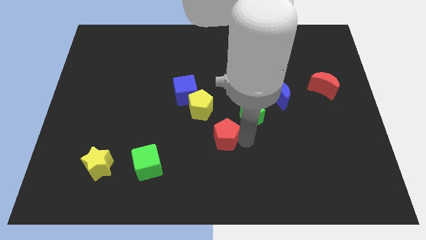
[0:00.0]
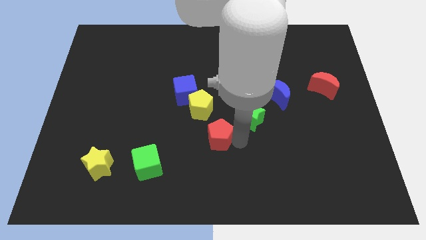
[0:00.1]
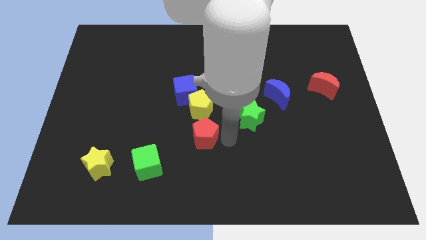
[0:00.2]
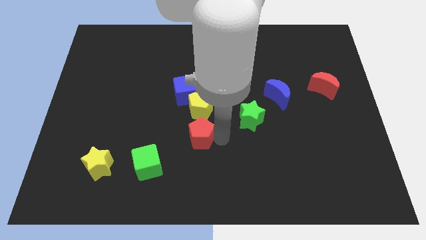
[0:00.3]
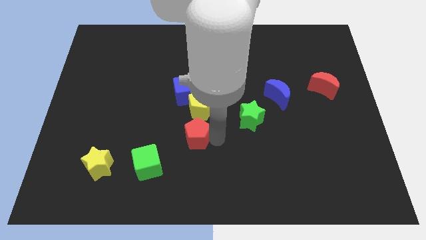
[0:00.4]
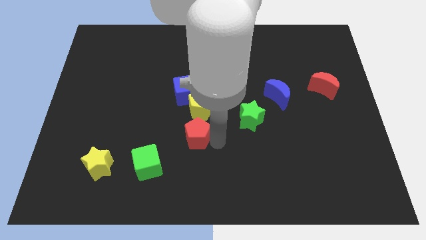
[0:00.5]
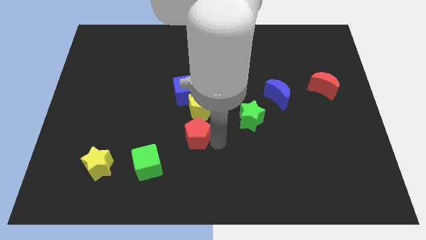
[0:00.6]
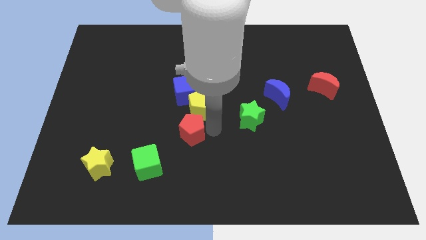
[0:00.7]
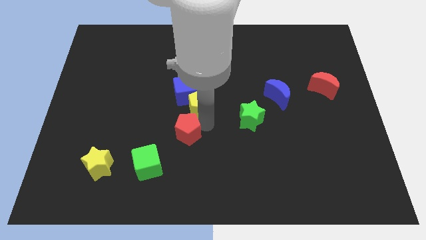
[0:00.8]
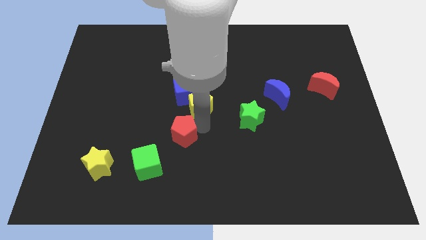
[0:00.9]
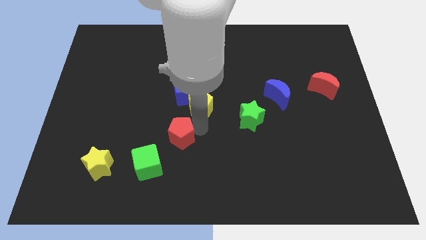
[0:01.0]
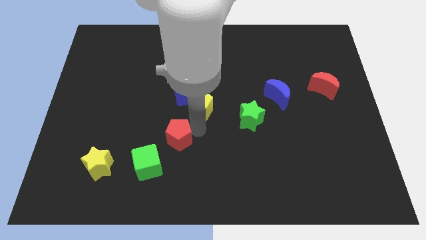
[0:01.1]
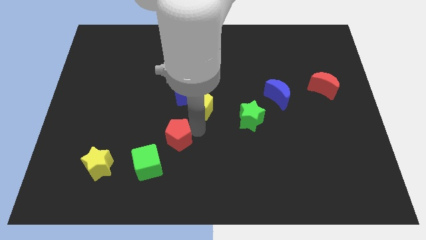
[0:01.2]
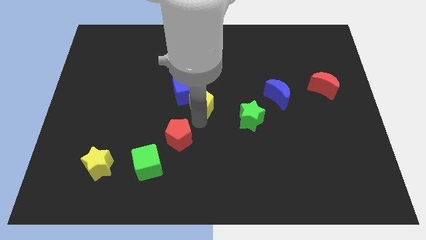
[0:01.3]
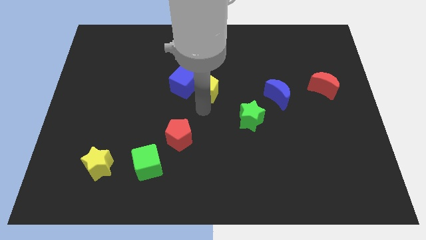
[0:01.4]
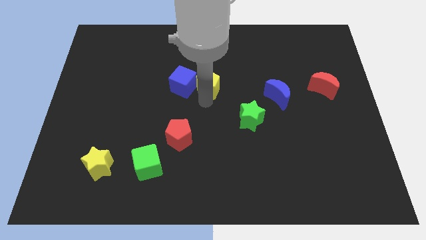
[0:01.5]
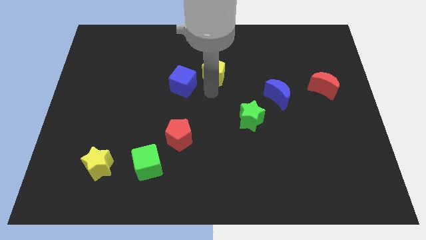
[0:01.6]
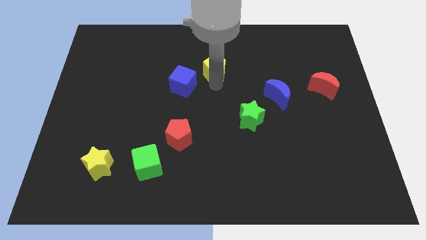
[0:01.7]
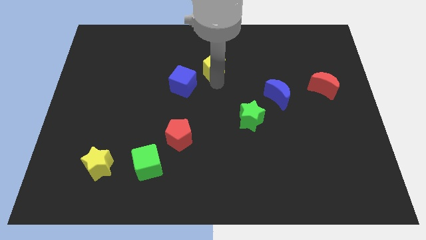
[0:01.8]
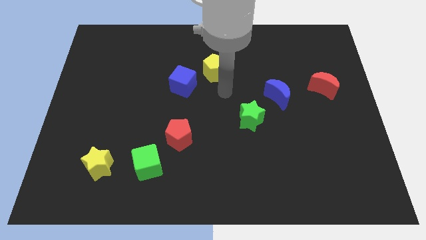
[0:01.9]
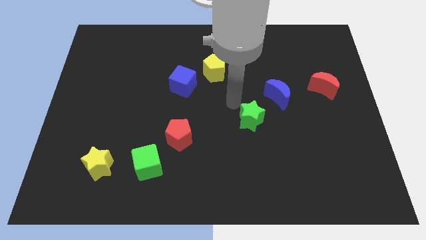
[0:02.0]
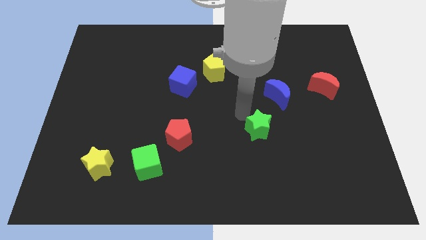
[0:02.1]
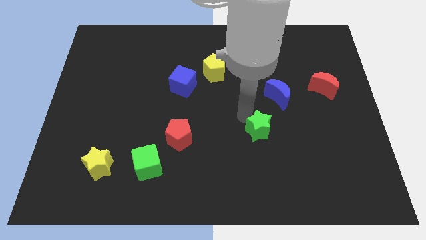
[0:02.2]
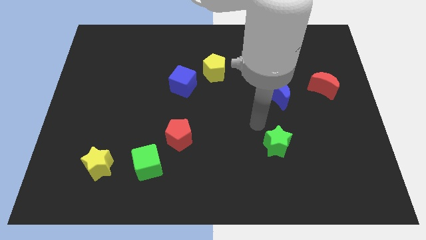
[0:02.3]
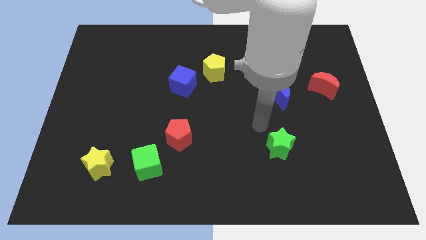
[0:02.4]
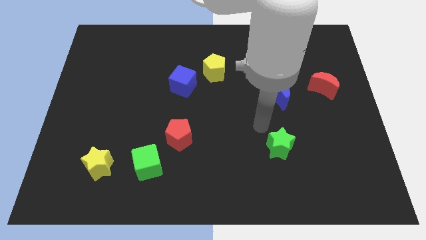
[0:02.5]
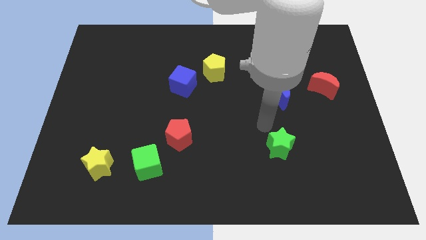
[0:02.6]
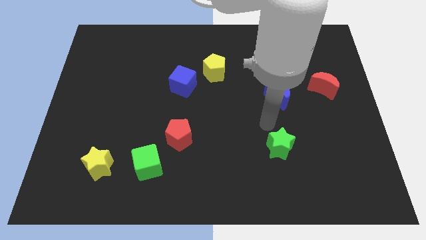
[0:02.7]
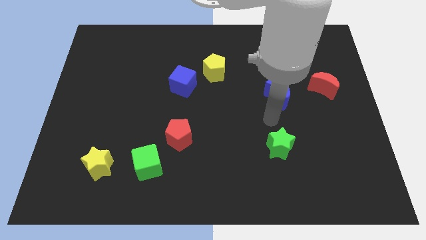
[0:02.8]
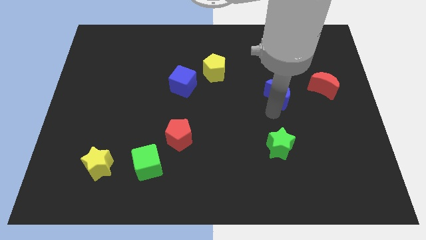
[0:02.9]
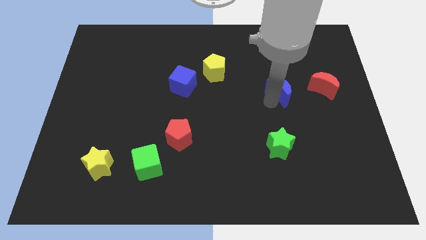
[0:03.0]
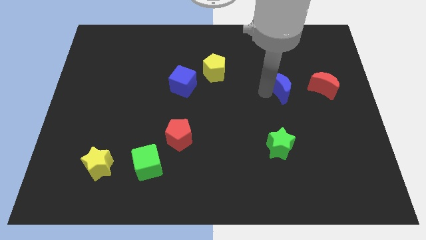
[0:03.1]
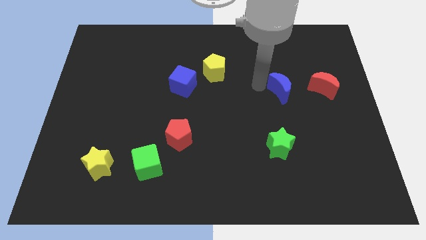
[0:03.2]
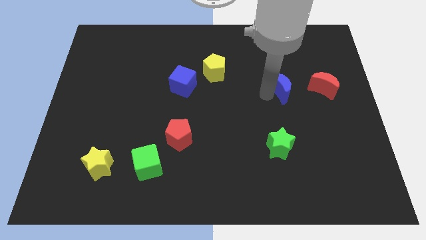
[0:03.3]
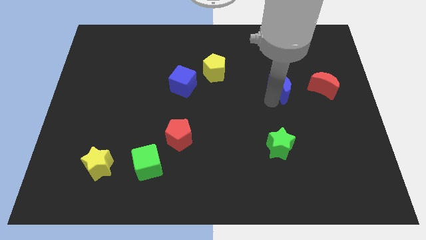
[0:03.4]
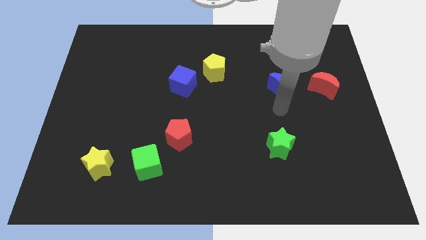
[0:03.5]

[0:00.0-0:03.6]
place red pentagon green star yellow pentagon and the blue crescent in form of a square

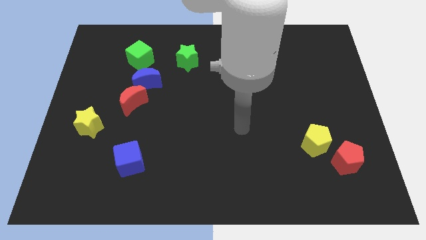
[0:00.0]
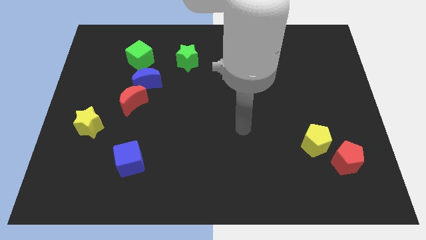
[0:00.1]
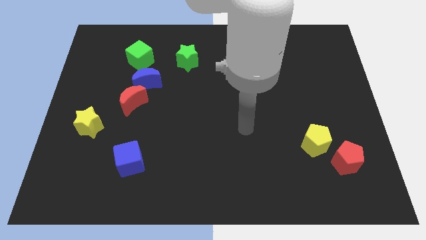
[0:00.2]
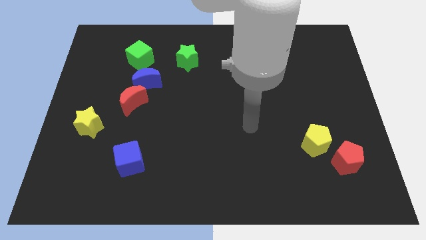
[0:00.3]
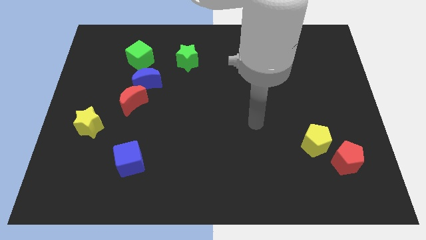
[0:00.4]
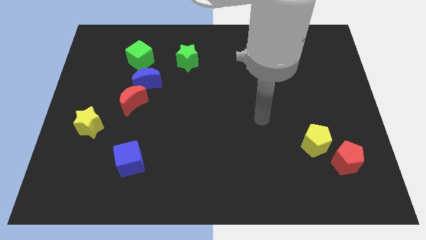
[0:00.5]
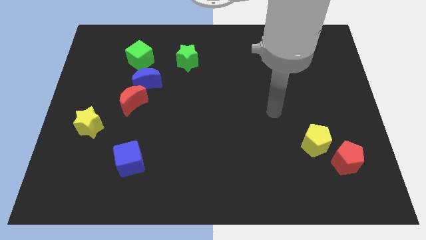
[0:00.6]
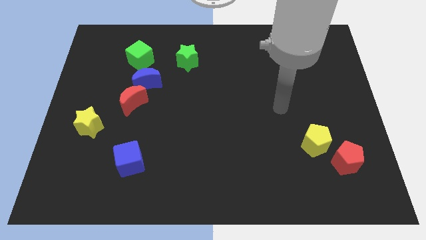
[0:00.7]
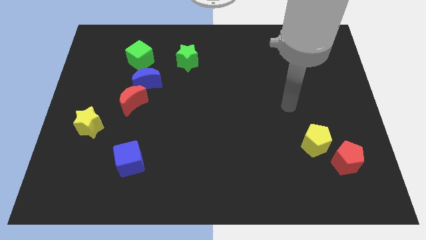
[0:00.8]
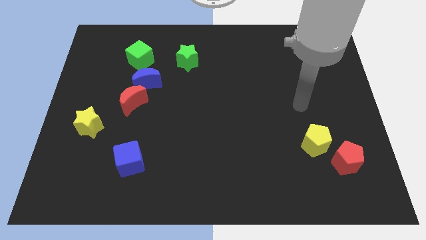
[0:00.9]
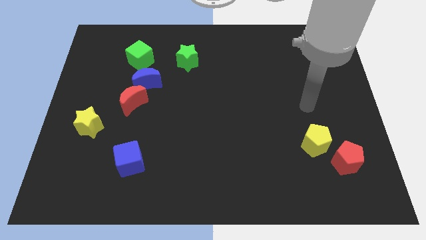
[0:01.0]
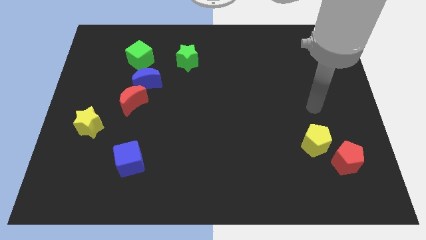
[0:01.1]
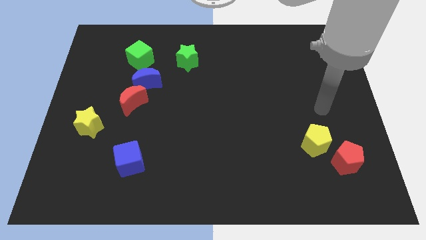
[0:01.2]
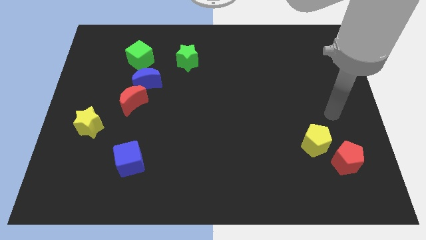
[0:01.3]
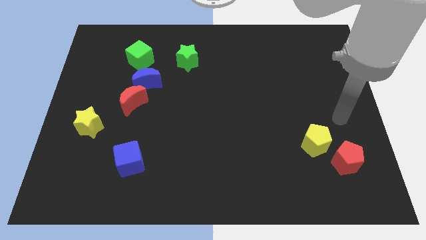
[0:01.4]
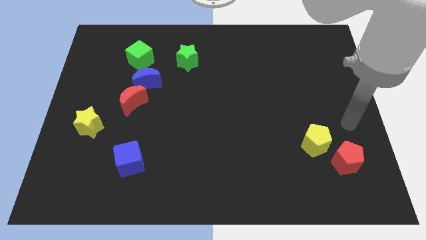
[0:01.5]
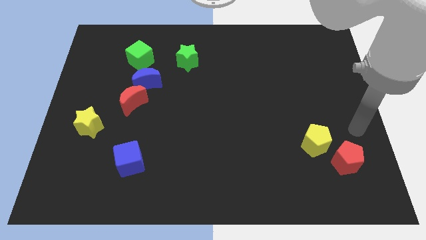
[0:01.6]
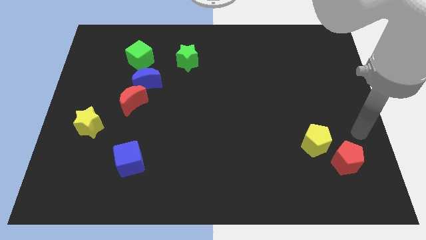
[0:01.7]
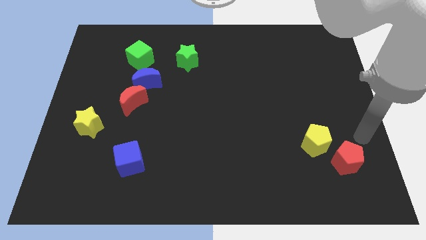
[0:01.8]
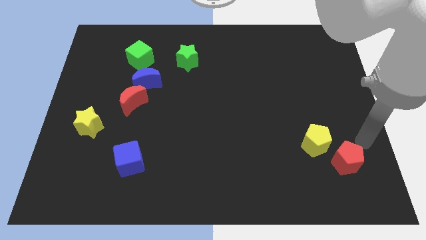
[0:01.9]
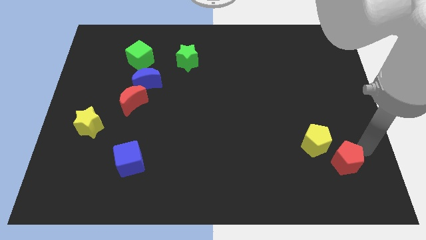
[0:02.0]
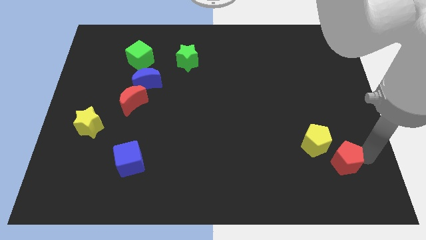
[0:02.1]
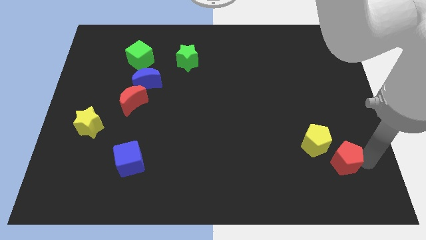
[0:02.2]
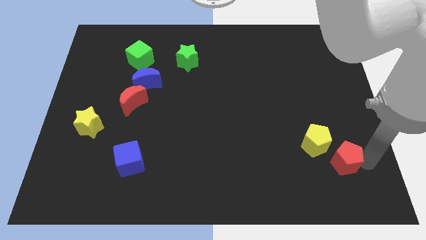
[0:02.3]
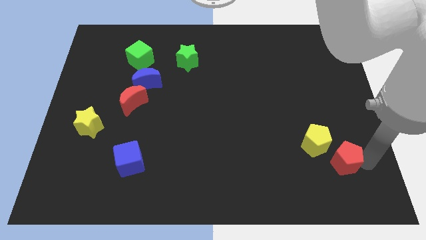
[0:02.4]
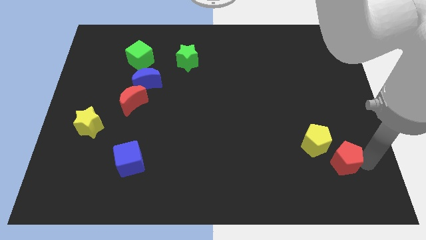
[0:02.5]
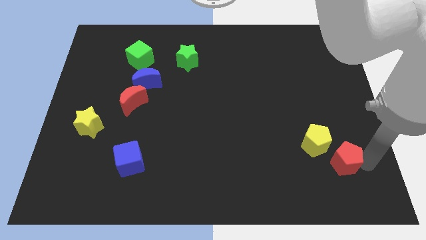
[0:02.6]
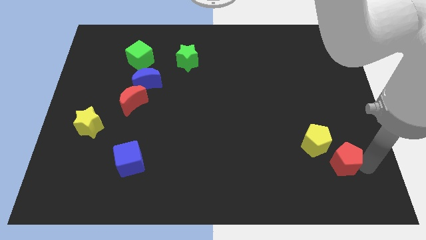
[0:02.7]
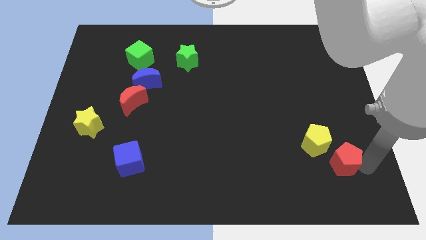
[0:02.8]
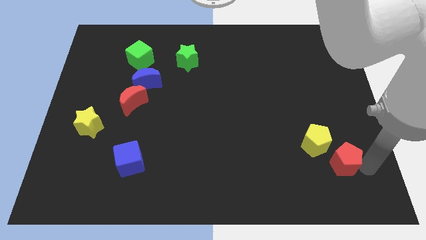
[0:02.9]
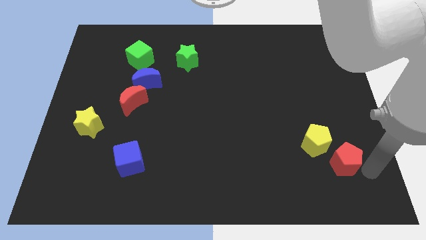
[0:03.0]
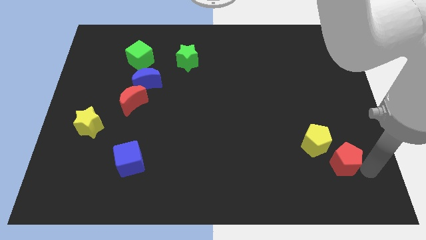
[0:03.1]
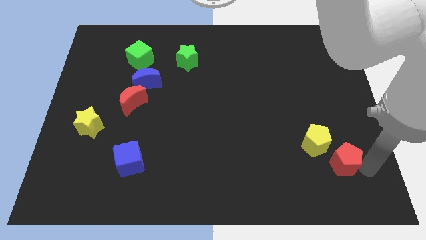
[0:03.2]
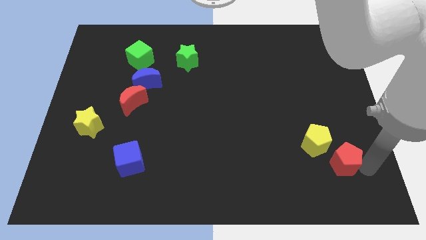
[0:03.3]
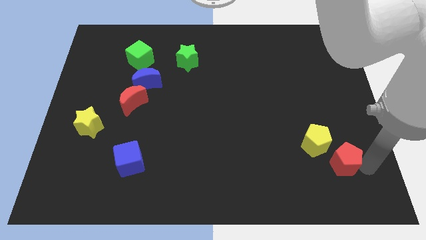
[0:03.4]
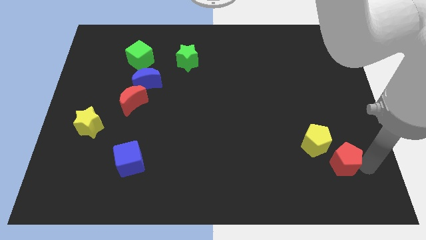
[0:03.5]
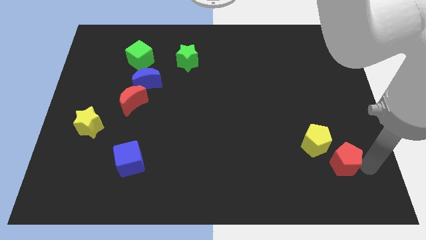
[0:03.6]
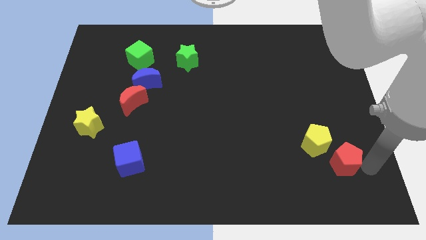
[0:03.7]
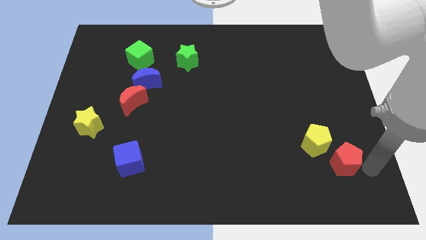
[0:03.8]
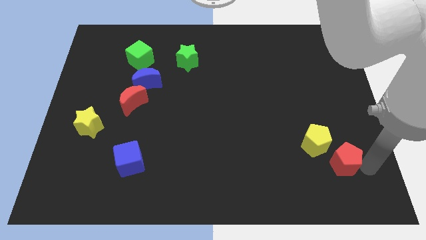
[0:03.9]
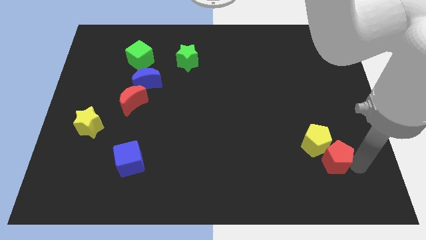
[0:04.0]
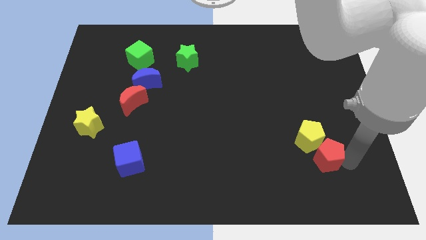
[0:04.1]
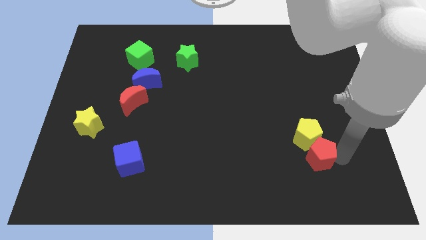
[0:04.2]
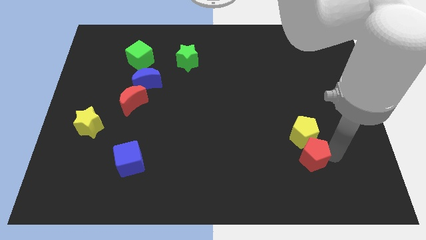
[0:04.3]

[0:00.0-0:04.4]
push the red pentagon into the yellow pentagon

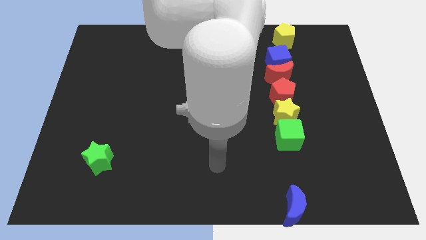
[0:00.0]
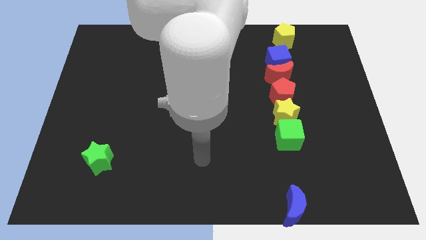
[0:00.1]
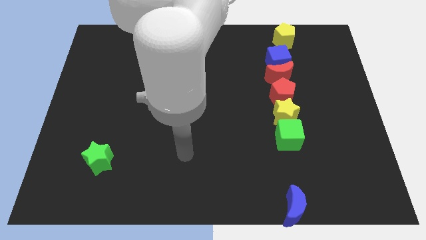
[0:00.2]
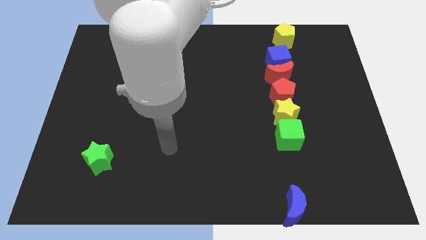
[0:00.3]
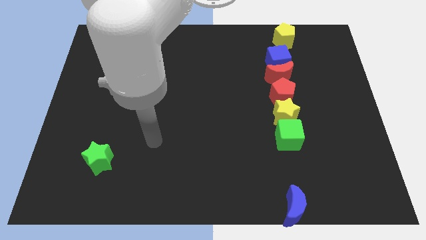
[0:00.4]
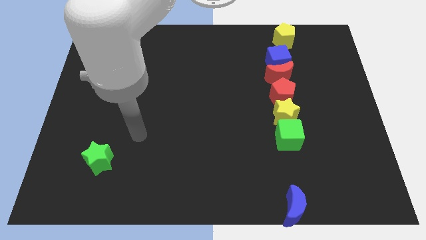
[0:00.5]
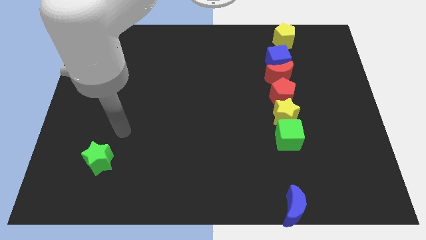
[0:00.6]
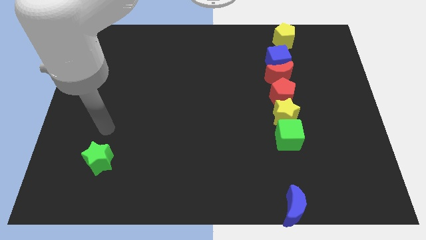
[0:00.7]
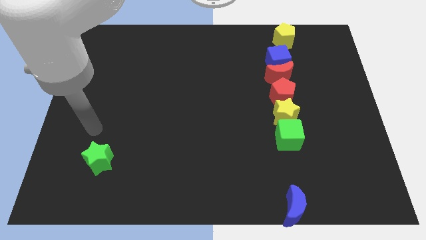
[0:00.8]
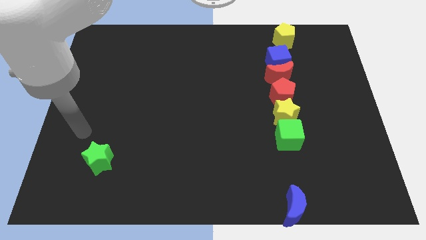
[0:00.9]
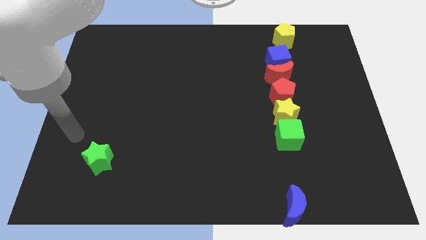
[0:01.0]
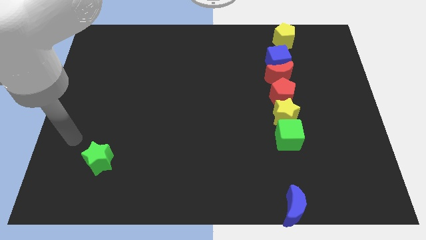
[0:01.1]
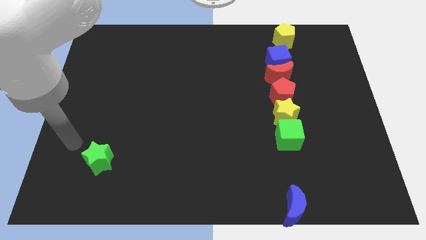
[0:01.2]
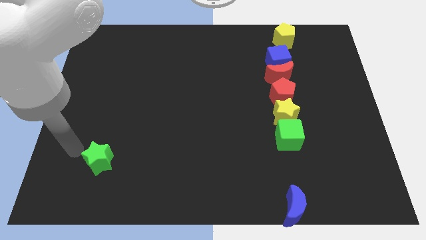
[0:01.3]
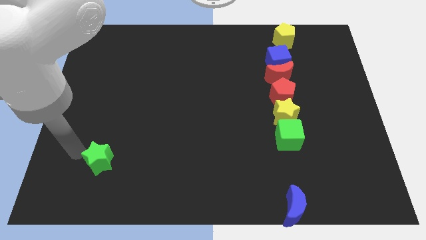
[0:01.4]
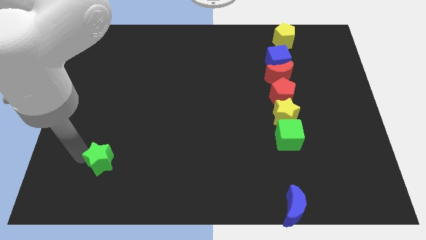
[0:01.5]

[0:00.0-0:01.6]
place the arm left to the green star
